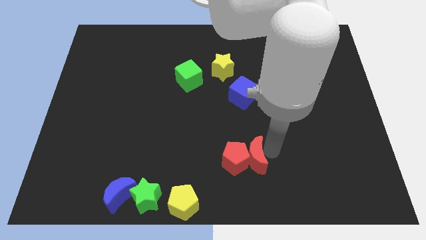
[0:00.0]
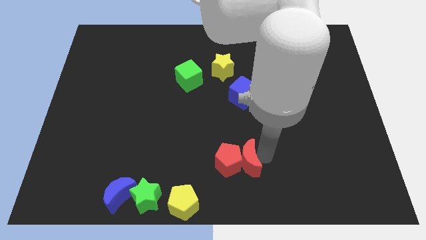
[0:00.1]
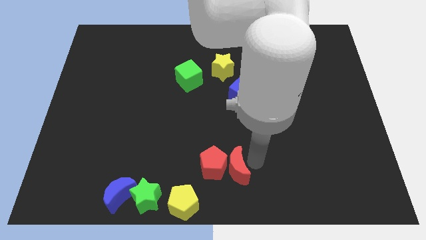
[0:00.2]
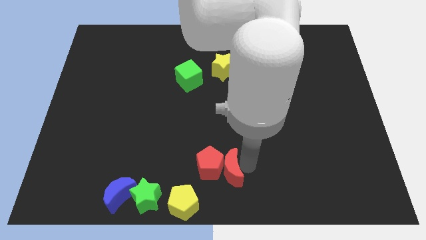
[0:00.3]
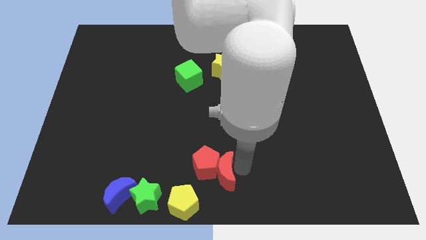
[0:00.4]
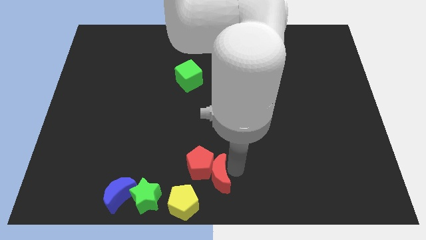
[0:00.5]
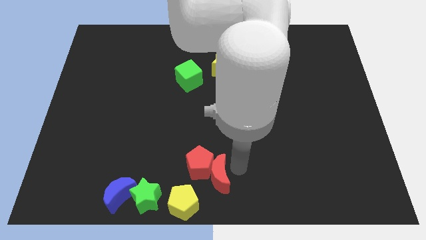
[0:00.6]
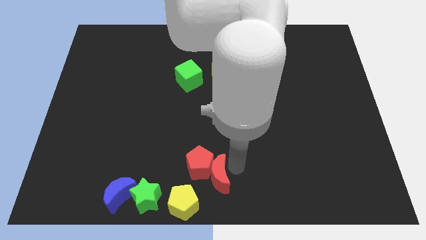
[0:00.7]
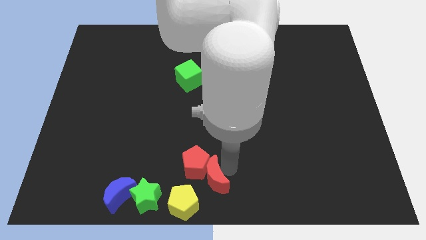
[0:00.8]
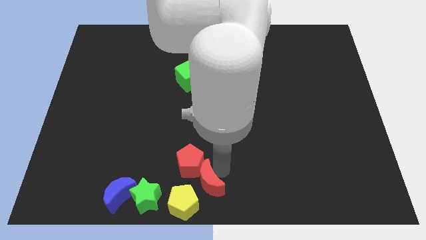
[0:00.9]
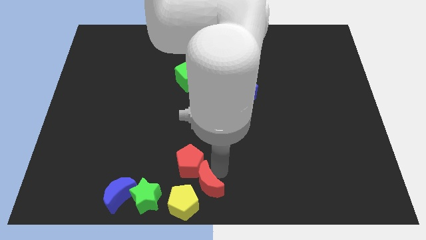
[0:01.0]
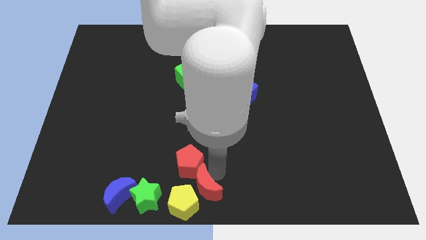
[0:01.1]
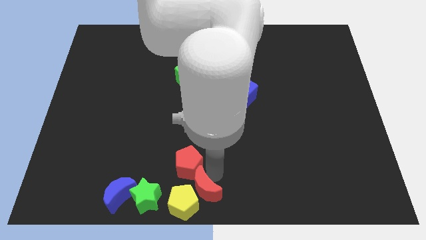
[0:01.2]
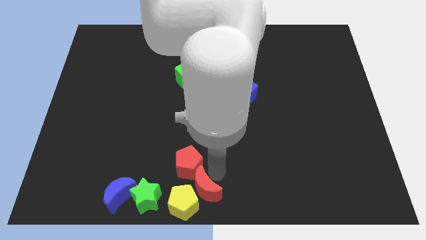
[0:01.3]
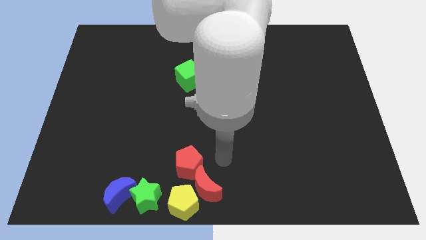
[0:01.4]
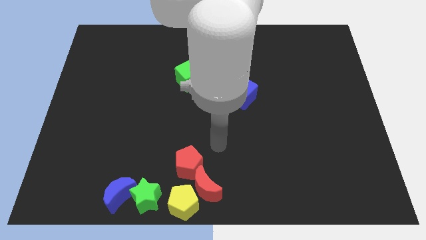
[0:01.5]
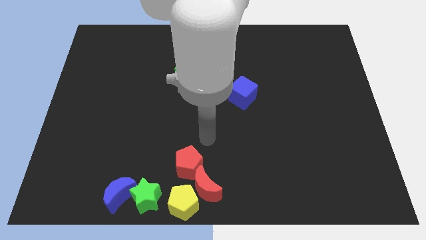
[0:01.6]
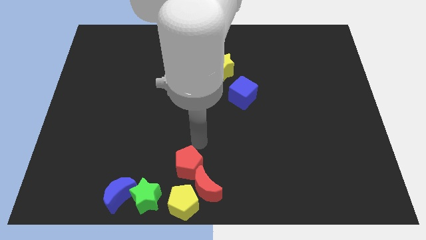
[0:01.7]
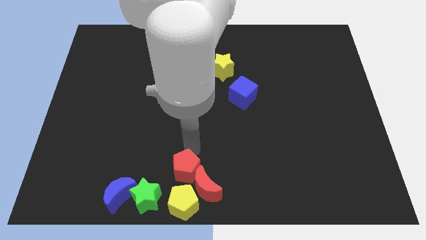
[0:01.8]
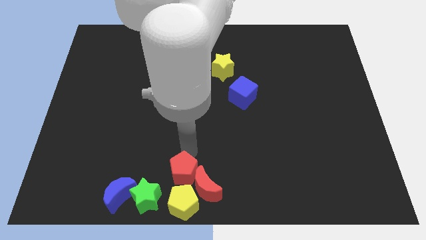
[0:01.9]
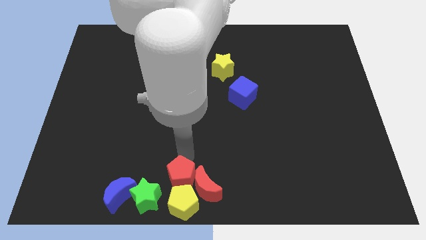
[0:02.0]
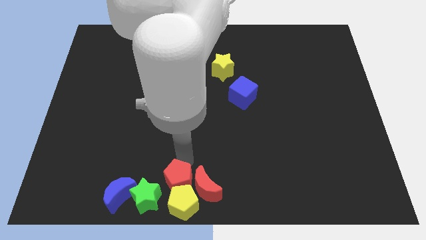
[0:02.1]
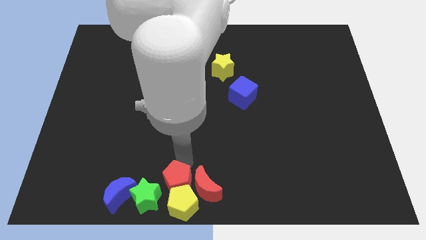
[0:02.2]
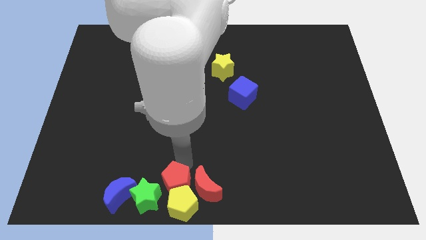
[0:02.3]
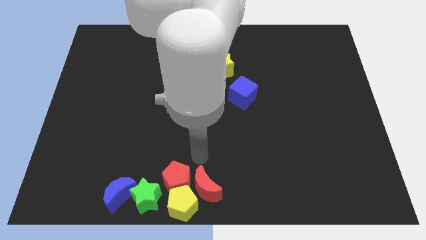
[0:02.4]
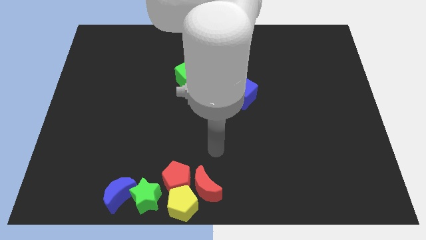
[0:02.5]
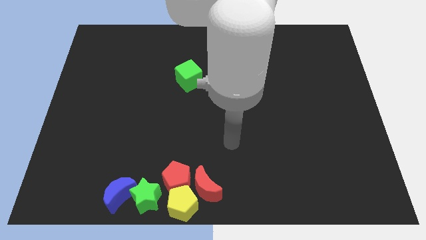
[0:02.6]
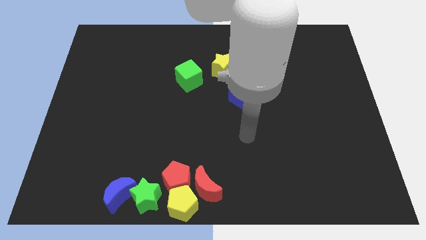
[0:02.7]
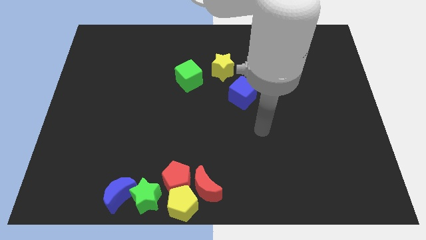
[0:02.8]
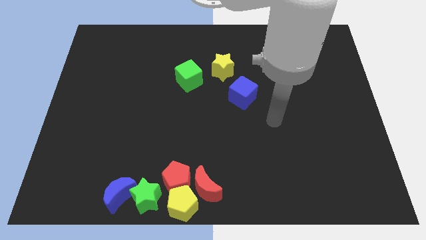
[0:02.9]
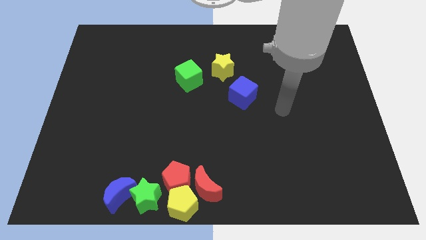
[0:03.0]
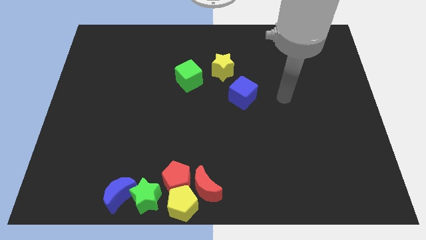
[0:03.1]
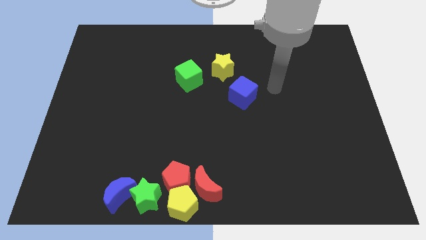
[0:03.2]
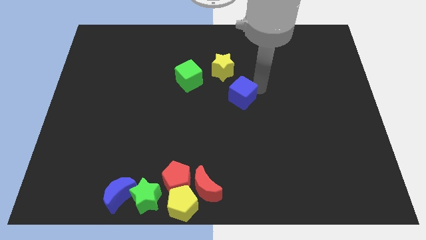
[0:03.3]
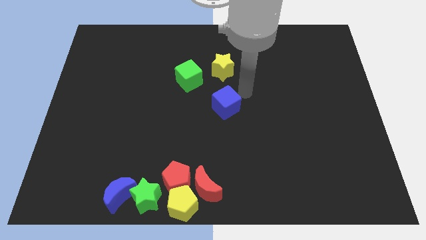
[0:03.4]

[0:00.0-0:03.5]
push red blocks in to yellow pentagon

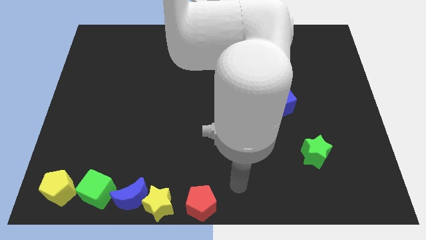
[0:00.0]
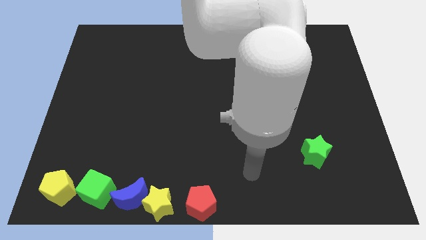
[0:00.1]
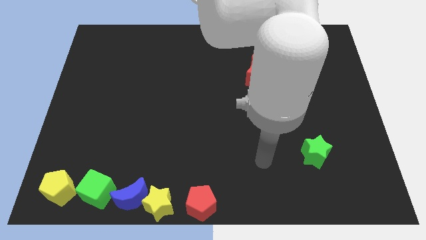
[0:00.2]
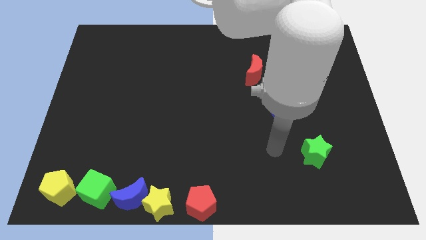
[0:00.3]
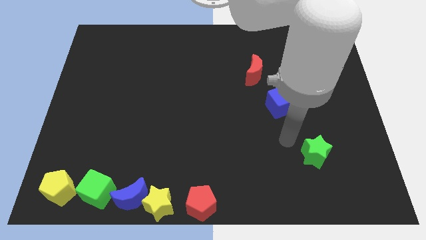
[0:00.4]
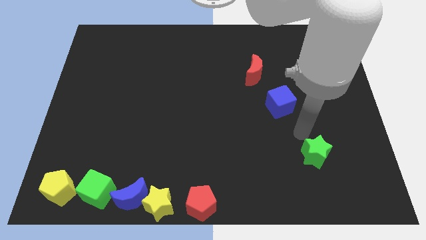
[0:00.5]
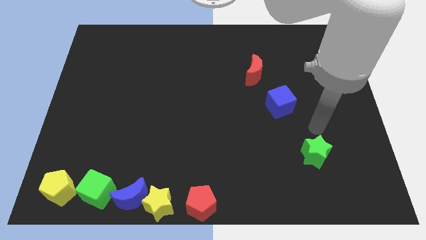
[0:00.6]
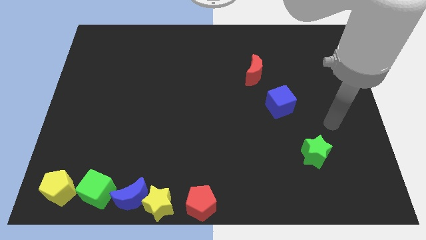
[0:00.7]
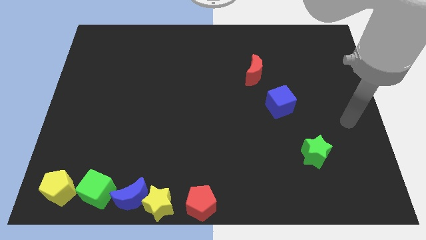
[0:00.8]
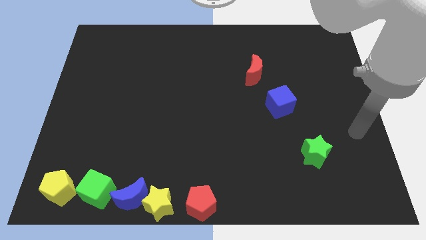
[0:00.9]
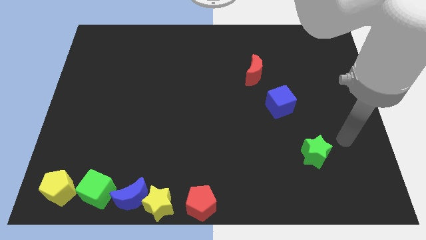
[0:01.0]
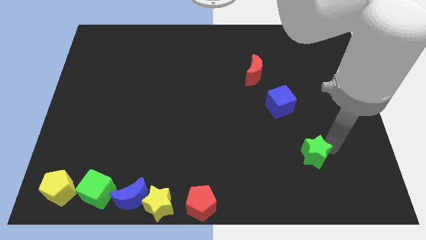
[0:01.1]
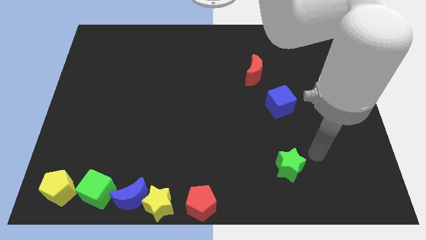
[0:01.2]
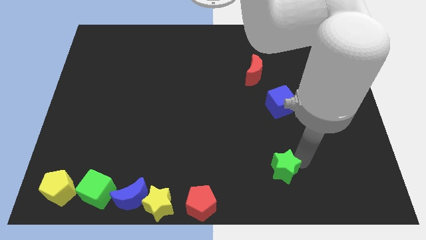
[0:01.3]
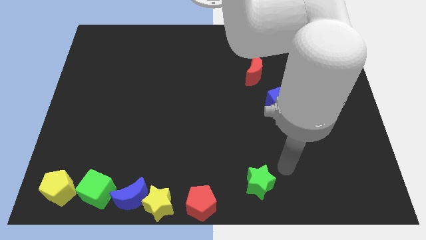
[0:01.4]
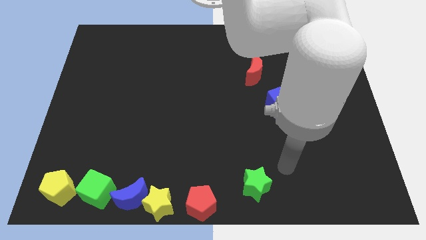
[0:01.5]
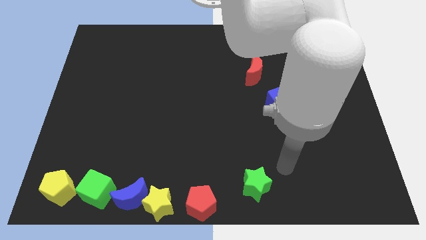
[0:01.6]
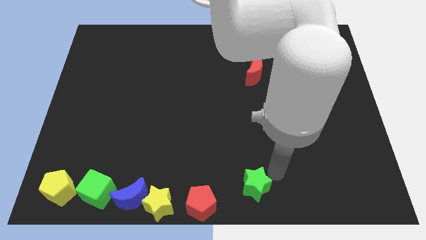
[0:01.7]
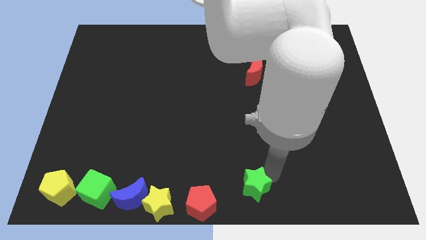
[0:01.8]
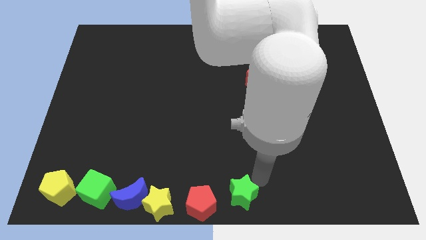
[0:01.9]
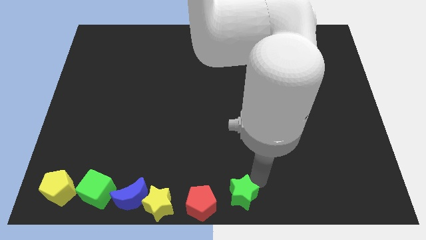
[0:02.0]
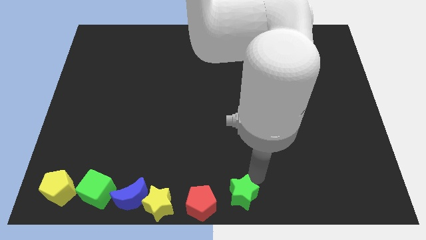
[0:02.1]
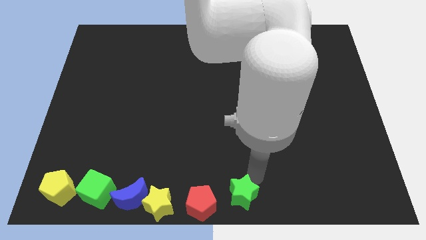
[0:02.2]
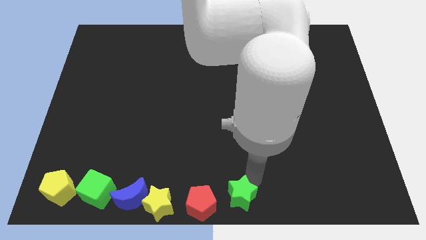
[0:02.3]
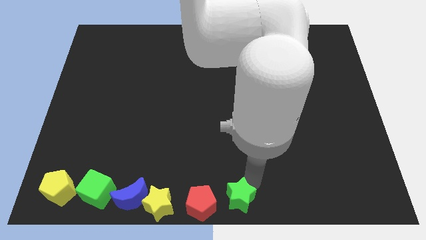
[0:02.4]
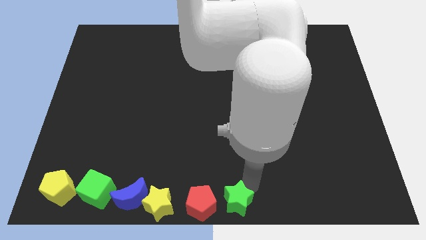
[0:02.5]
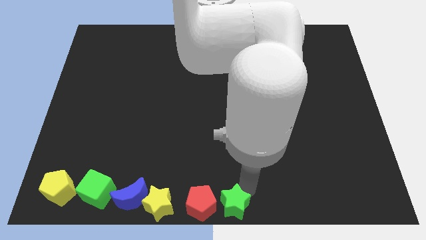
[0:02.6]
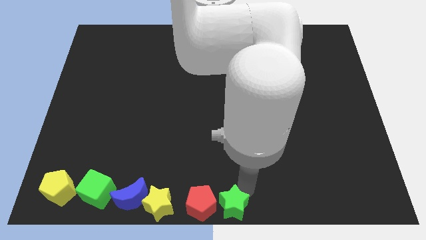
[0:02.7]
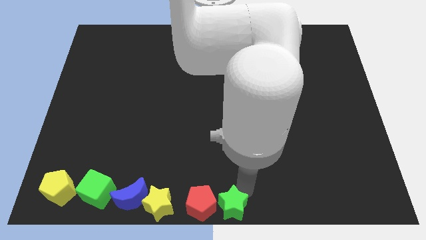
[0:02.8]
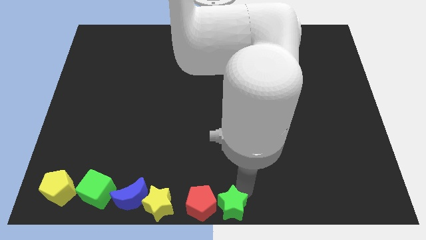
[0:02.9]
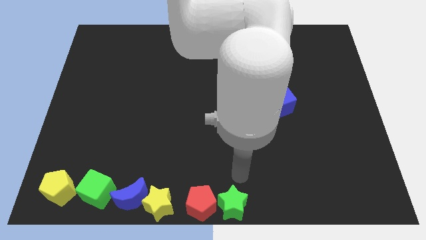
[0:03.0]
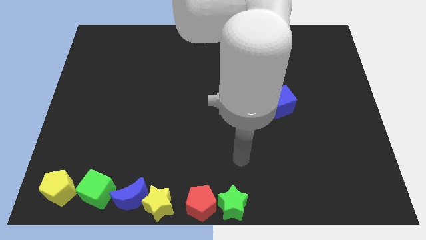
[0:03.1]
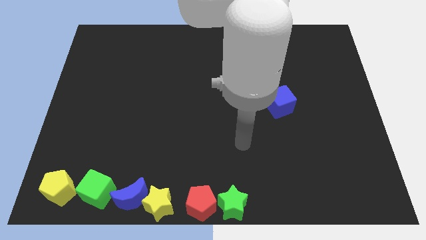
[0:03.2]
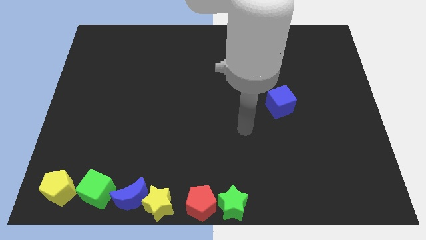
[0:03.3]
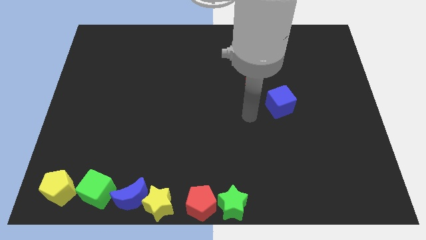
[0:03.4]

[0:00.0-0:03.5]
move the green star to the right of the red pentagon

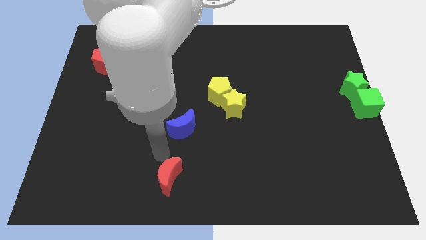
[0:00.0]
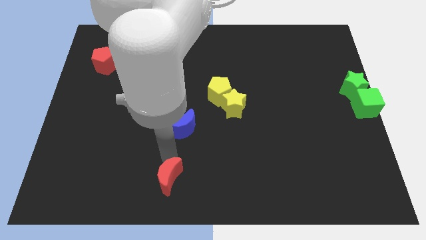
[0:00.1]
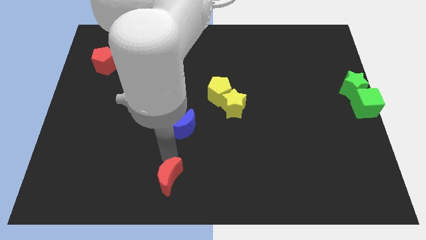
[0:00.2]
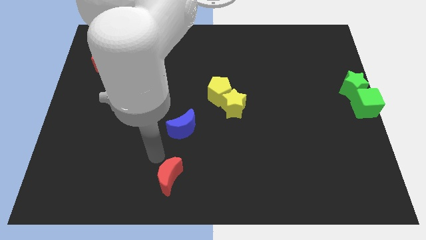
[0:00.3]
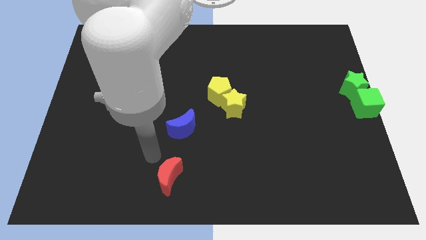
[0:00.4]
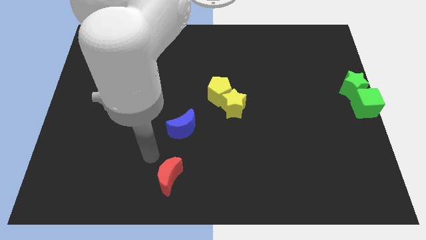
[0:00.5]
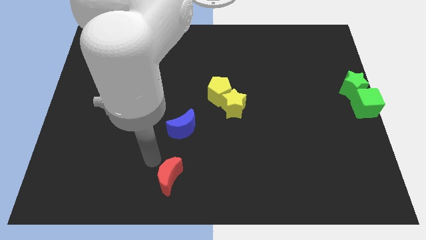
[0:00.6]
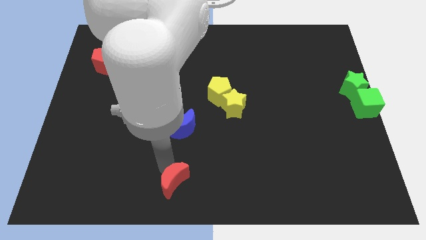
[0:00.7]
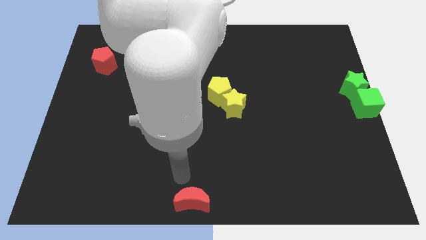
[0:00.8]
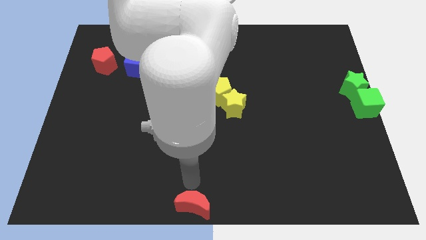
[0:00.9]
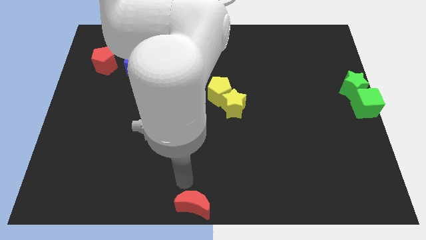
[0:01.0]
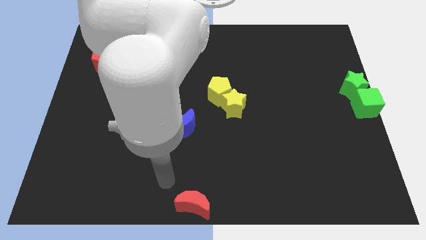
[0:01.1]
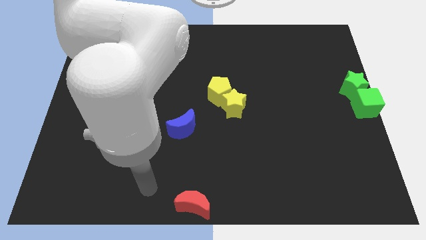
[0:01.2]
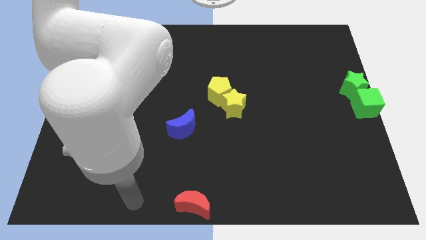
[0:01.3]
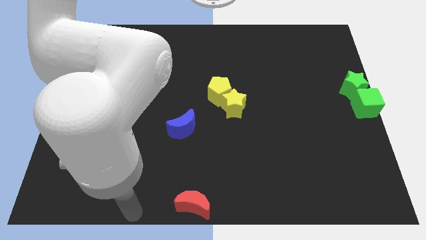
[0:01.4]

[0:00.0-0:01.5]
move the red crescent to the bottom center of the board
